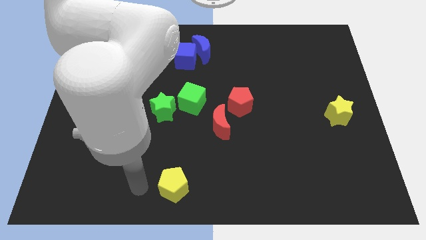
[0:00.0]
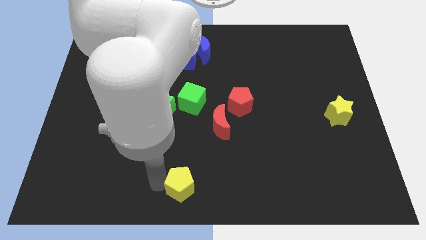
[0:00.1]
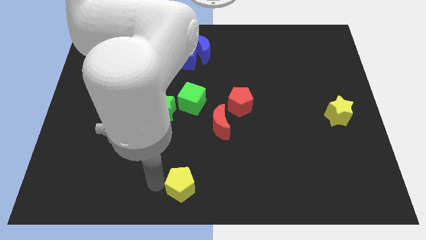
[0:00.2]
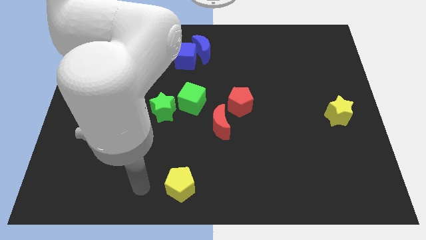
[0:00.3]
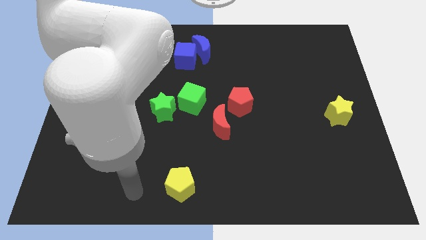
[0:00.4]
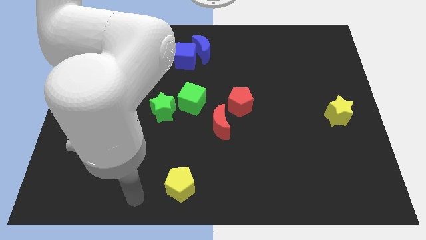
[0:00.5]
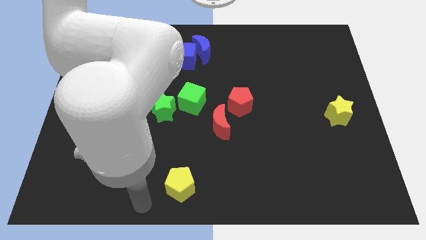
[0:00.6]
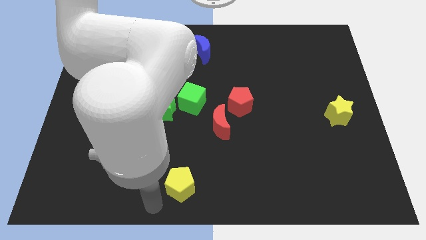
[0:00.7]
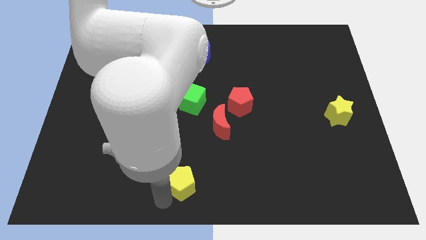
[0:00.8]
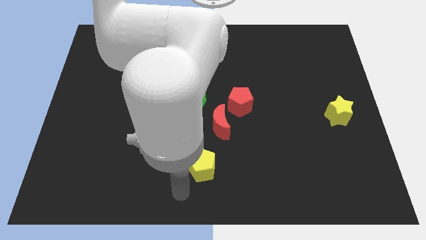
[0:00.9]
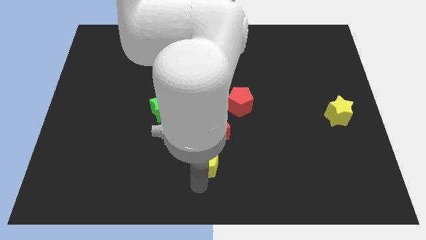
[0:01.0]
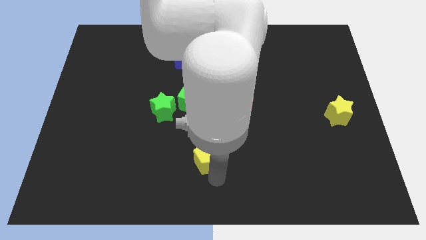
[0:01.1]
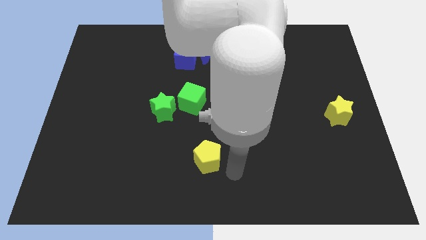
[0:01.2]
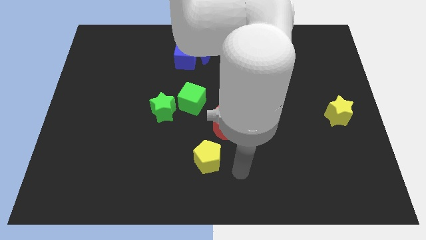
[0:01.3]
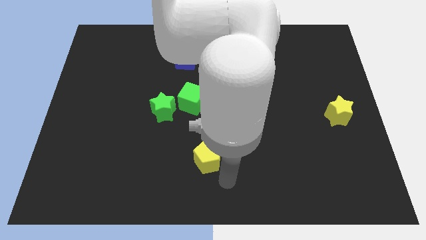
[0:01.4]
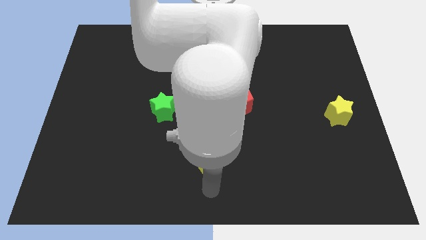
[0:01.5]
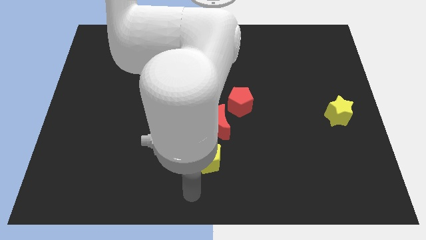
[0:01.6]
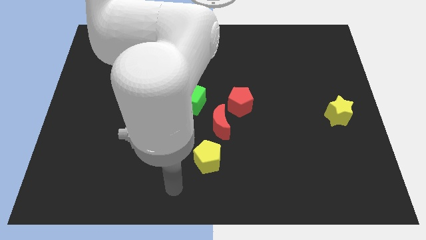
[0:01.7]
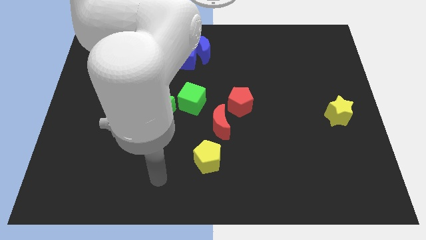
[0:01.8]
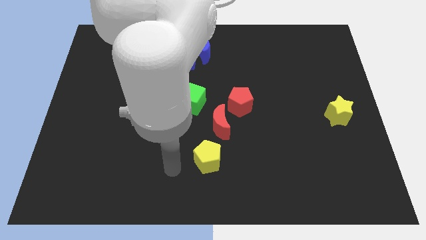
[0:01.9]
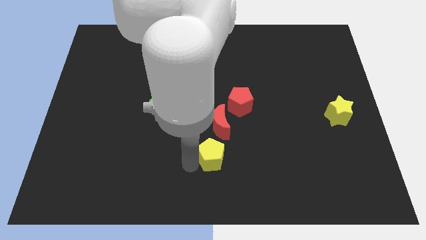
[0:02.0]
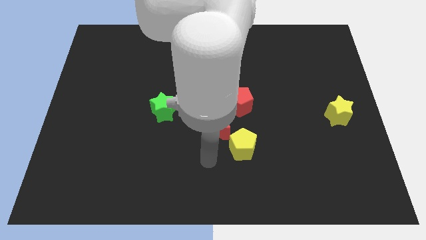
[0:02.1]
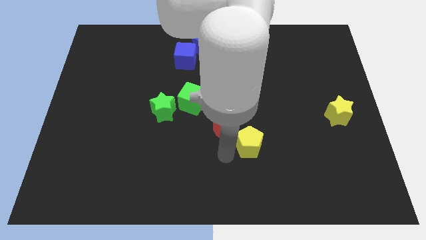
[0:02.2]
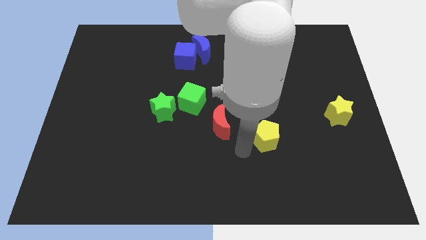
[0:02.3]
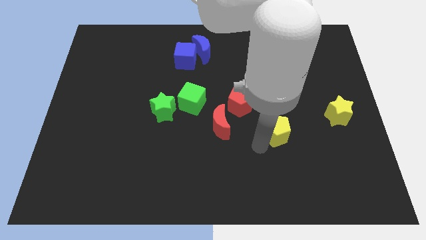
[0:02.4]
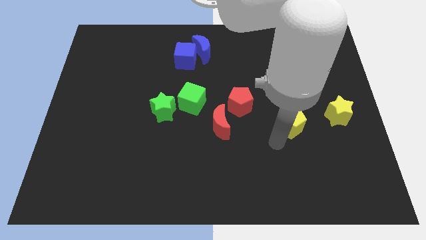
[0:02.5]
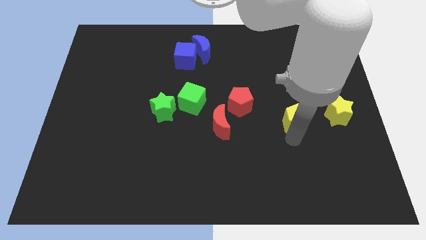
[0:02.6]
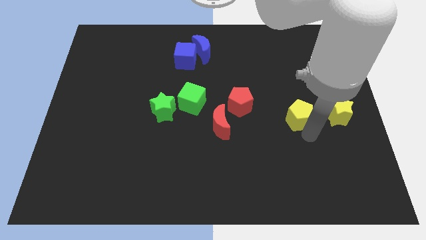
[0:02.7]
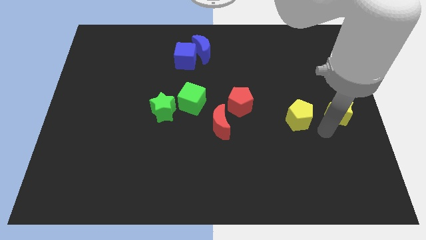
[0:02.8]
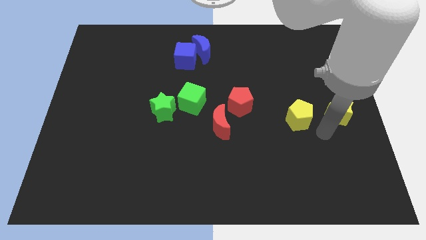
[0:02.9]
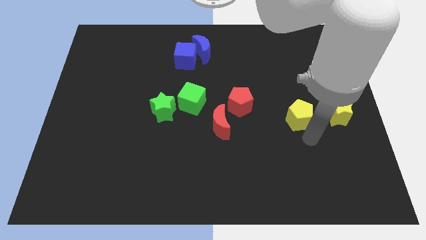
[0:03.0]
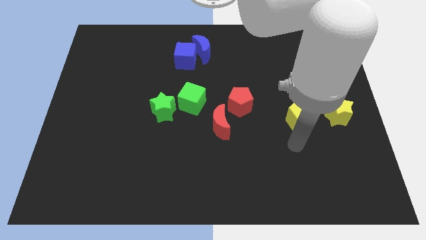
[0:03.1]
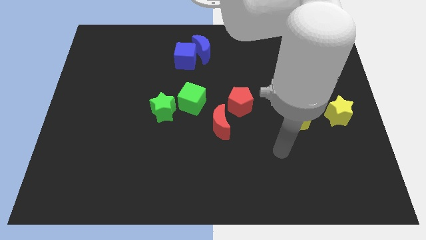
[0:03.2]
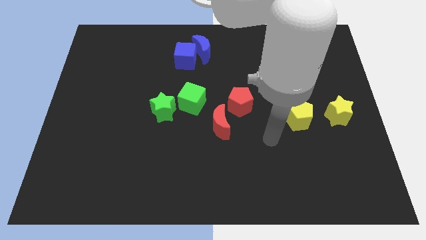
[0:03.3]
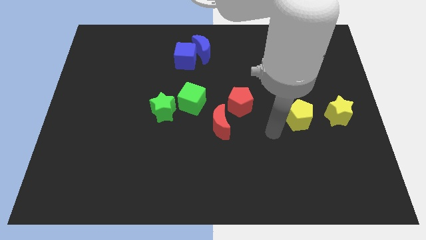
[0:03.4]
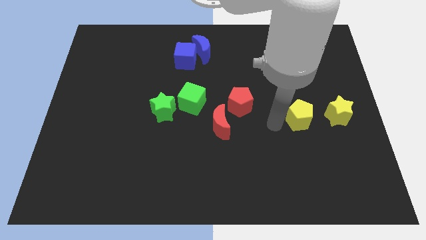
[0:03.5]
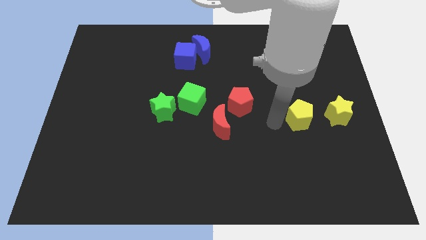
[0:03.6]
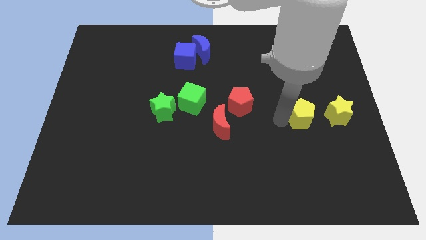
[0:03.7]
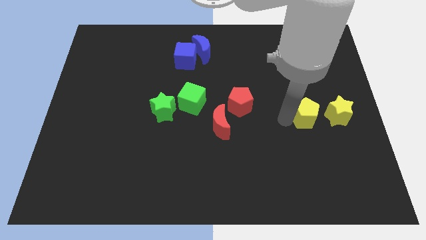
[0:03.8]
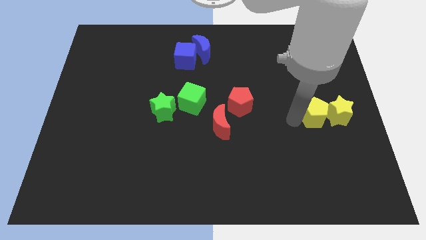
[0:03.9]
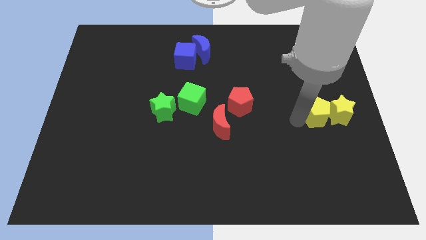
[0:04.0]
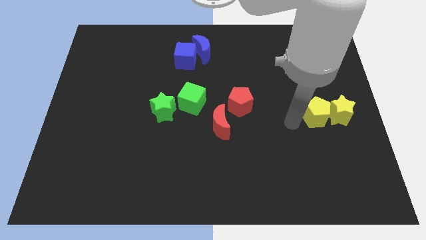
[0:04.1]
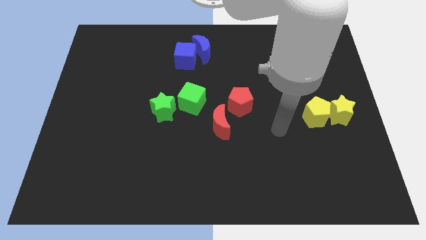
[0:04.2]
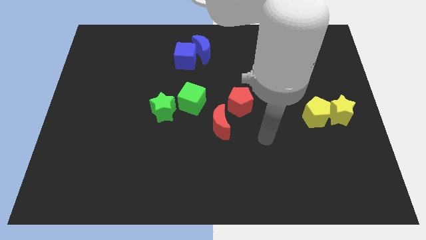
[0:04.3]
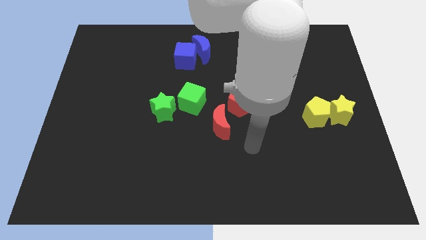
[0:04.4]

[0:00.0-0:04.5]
place the yellow pentagon to the left of yellow star

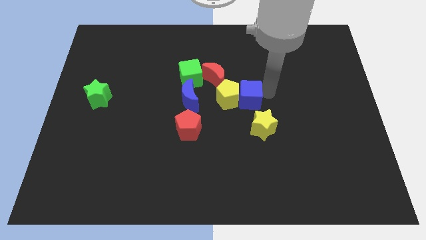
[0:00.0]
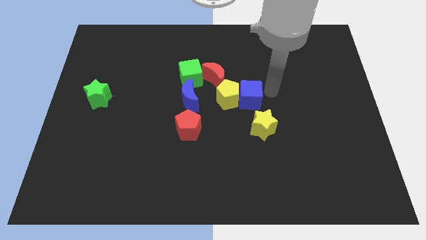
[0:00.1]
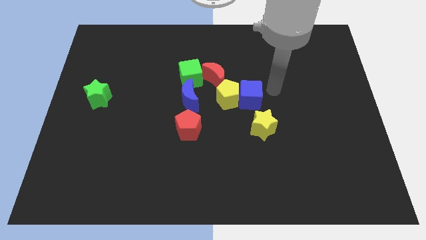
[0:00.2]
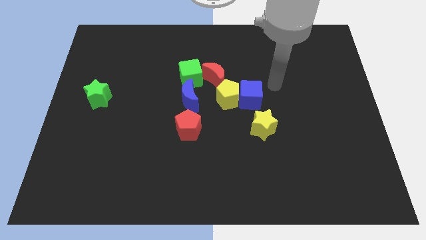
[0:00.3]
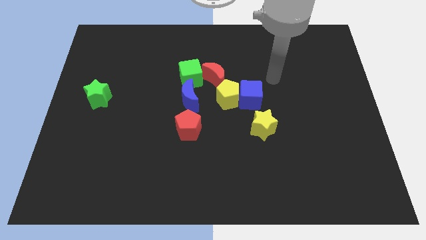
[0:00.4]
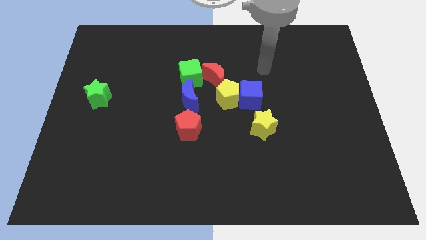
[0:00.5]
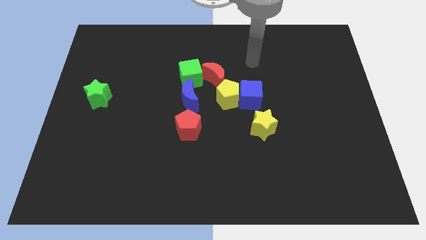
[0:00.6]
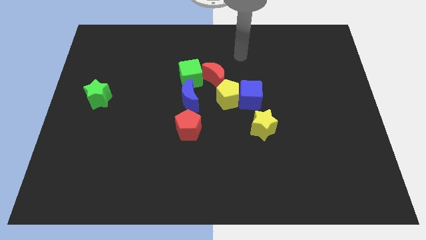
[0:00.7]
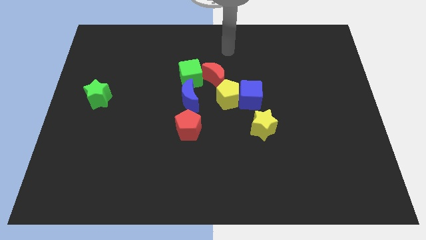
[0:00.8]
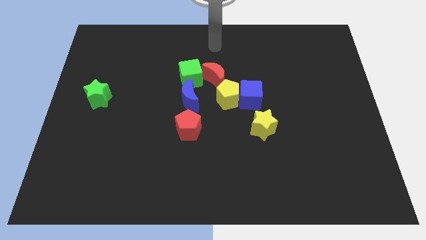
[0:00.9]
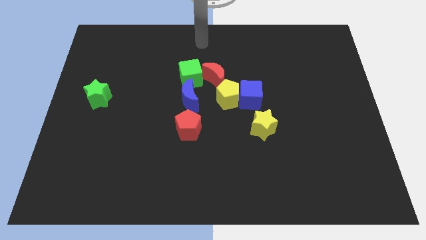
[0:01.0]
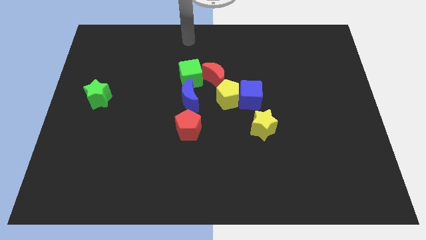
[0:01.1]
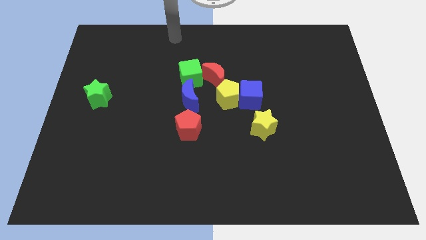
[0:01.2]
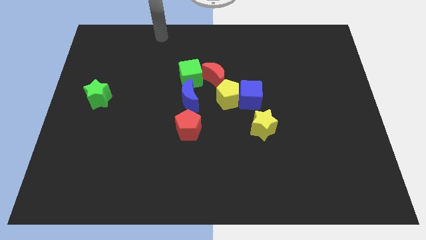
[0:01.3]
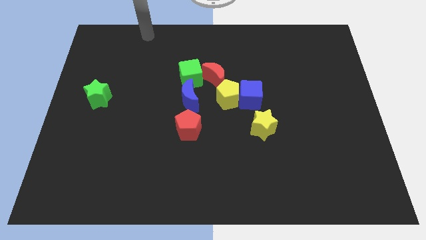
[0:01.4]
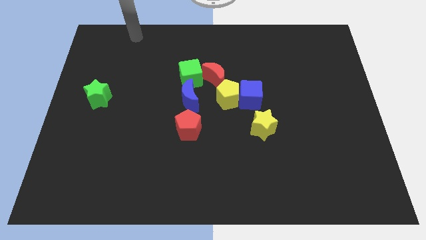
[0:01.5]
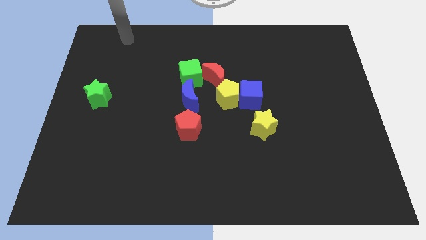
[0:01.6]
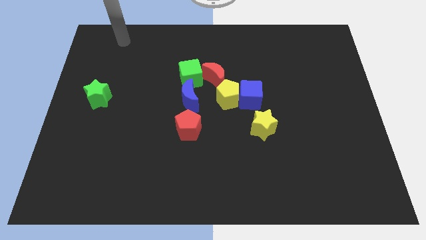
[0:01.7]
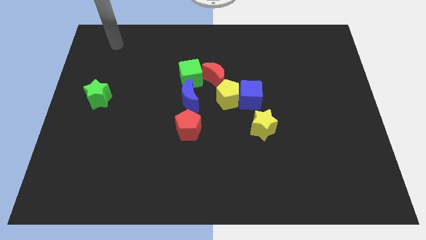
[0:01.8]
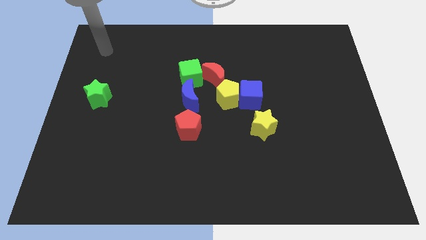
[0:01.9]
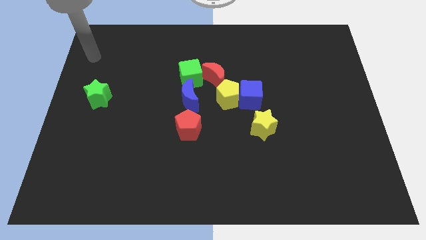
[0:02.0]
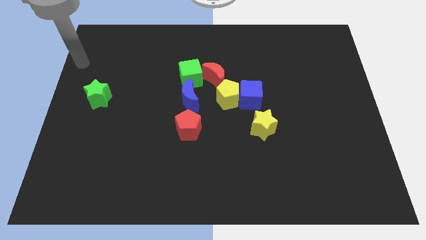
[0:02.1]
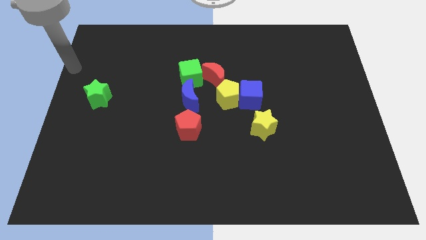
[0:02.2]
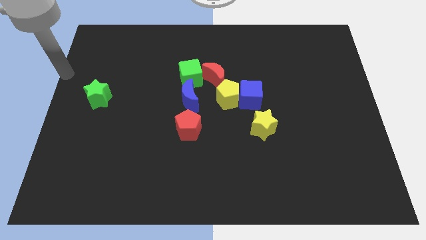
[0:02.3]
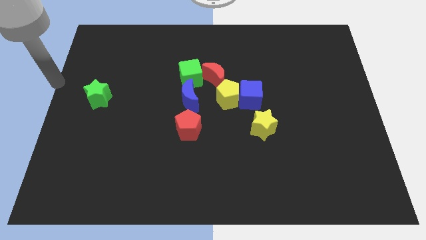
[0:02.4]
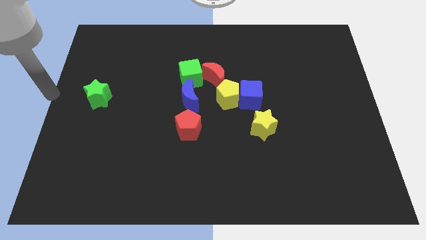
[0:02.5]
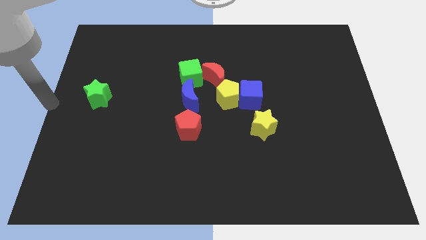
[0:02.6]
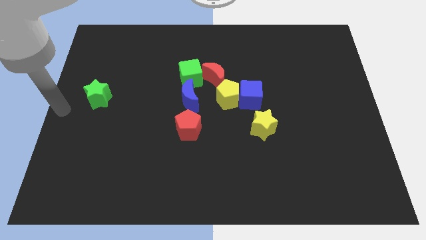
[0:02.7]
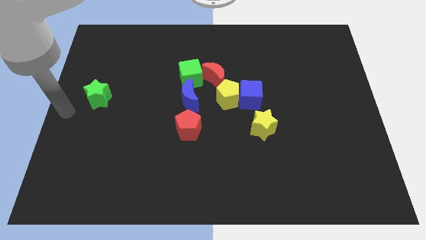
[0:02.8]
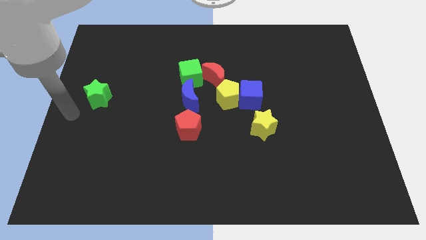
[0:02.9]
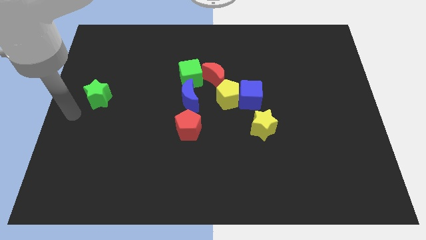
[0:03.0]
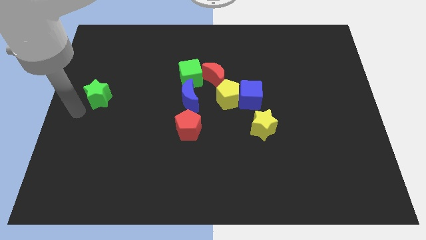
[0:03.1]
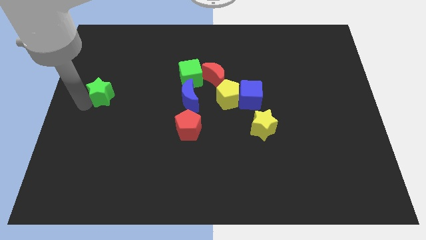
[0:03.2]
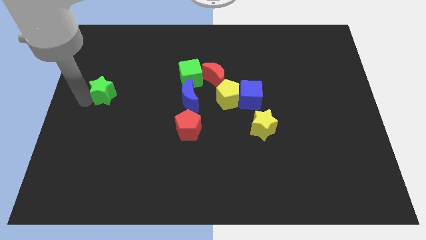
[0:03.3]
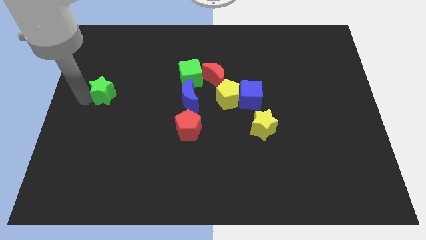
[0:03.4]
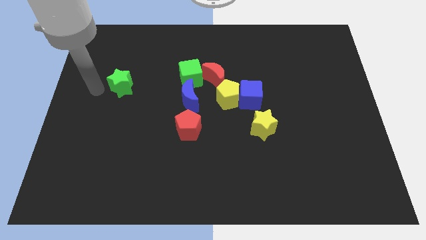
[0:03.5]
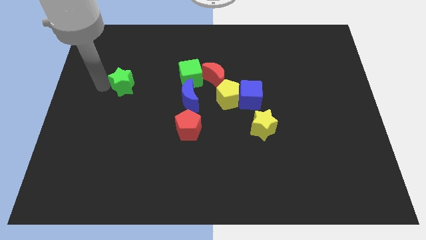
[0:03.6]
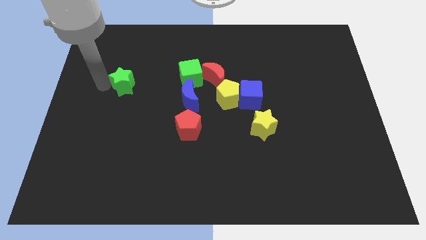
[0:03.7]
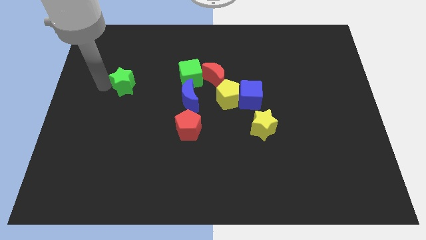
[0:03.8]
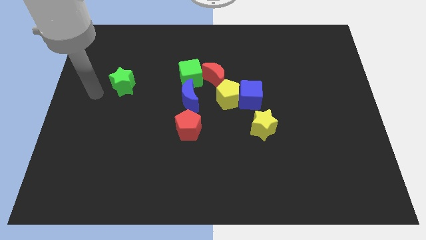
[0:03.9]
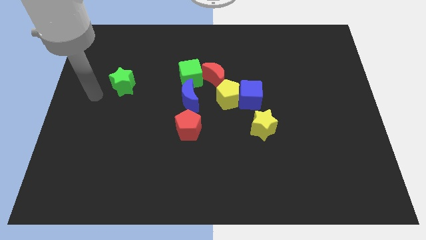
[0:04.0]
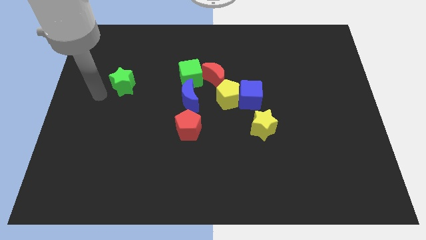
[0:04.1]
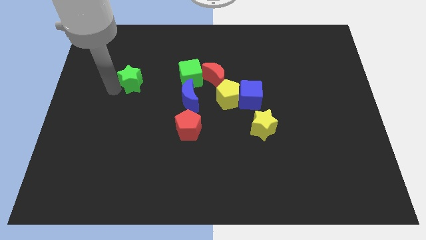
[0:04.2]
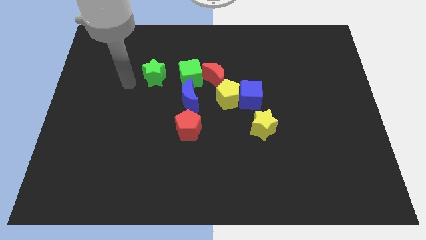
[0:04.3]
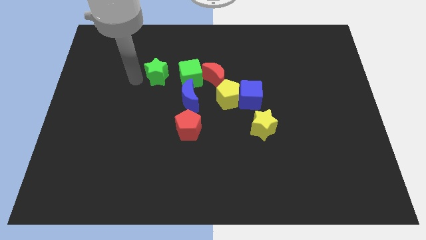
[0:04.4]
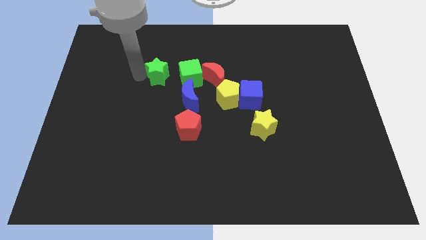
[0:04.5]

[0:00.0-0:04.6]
place green star to the left side of the green cube
